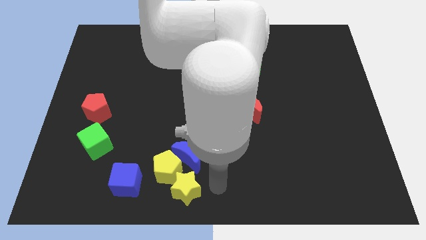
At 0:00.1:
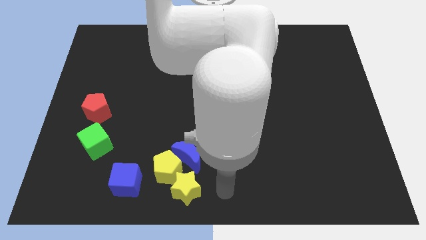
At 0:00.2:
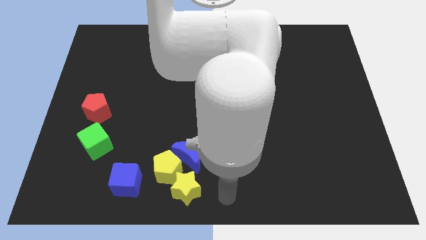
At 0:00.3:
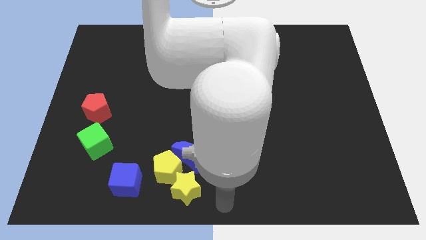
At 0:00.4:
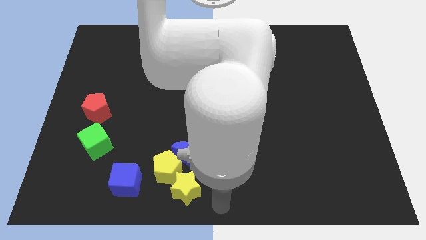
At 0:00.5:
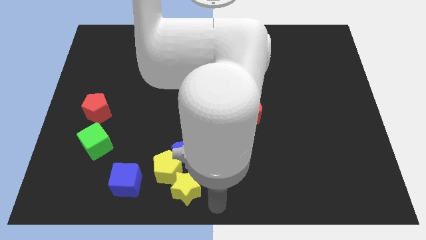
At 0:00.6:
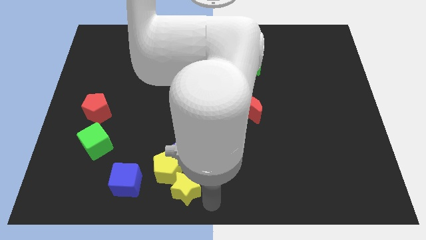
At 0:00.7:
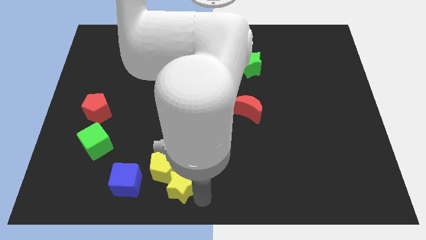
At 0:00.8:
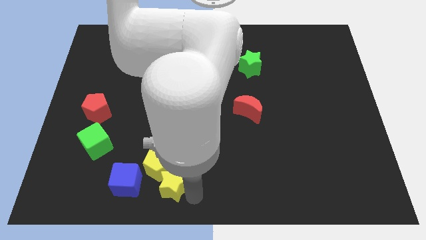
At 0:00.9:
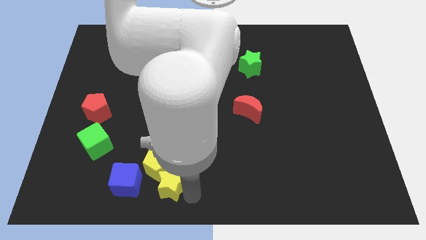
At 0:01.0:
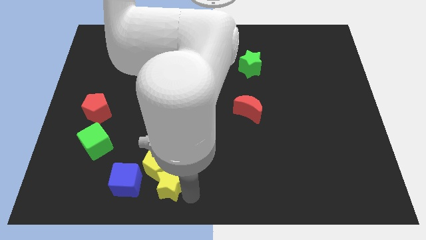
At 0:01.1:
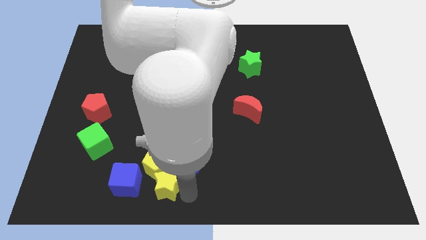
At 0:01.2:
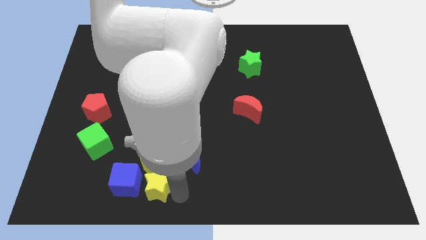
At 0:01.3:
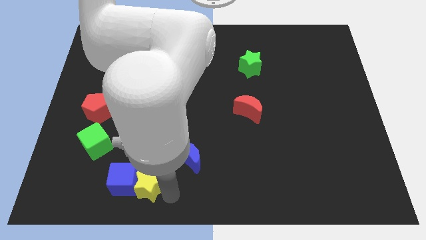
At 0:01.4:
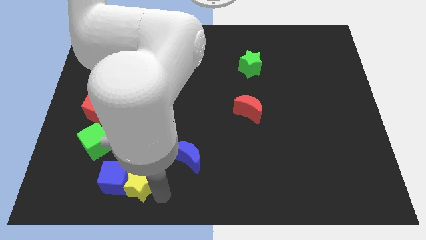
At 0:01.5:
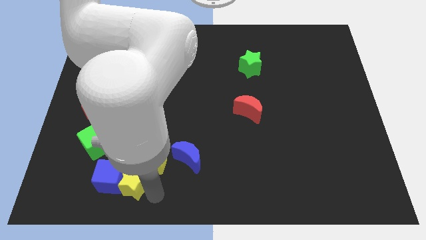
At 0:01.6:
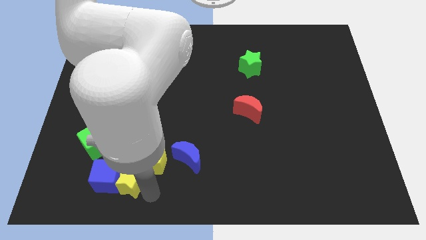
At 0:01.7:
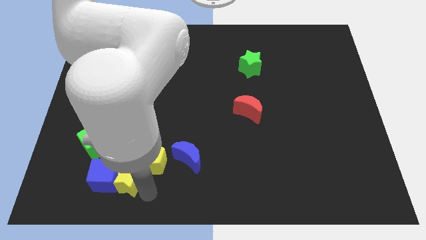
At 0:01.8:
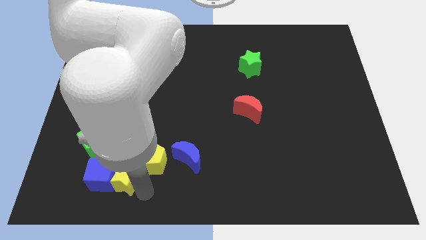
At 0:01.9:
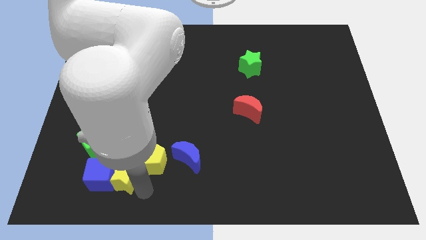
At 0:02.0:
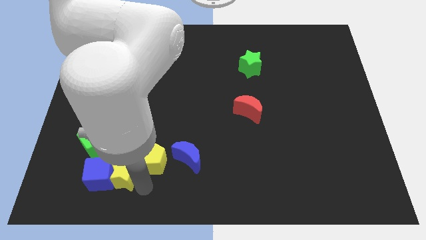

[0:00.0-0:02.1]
move the yellow star into the blue cube

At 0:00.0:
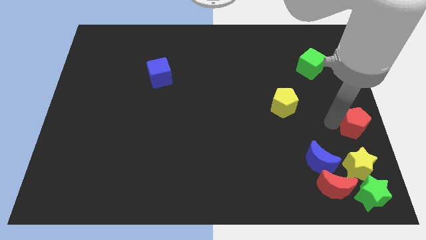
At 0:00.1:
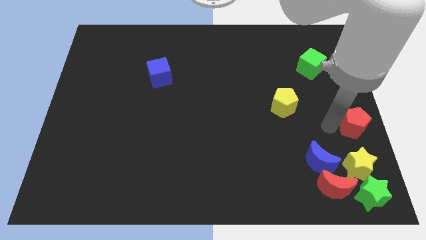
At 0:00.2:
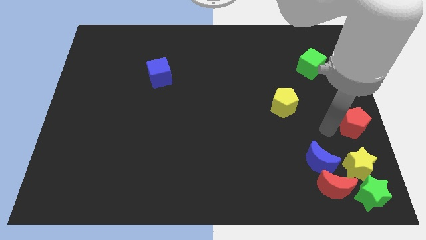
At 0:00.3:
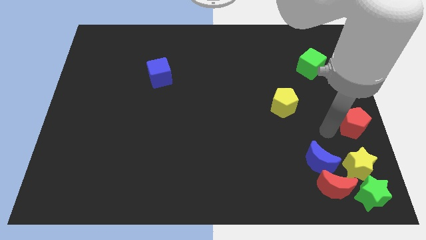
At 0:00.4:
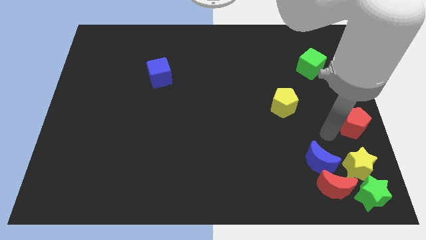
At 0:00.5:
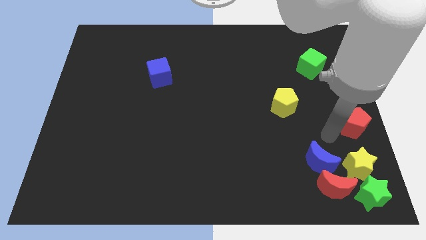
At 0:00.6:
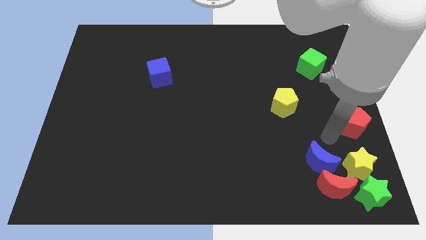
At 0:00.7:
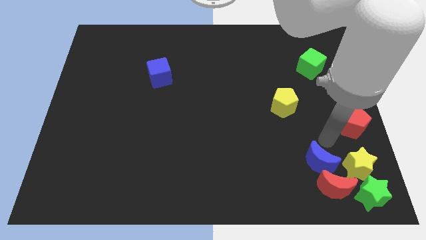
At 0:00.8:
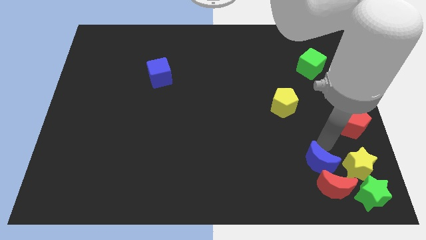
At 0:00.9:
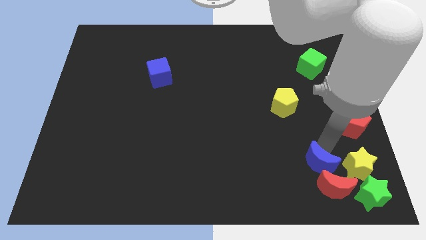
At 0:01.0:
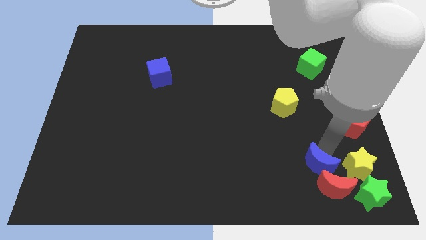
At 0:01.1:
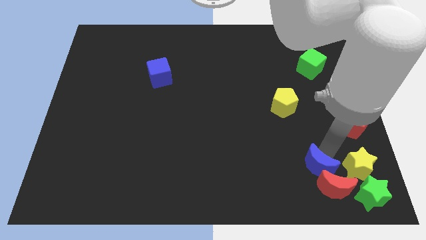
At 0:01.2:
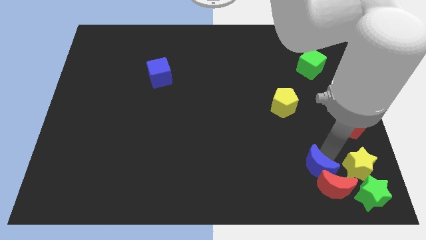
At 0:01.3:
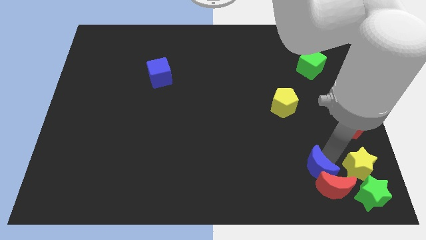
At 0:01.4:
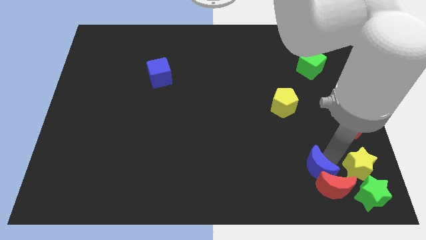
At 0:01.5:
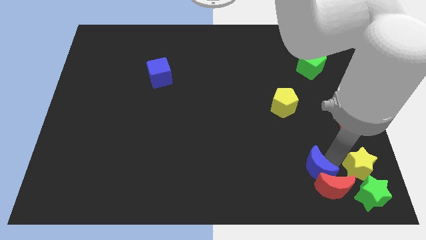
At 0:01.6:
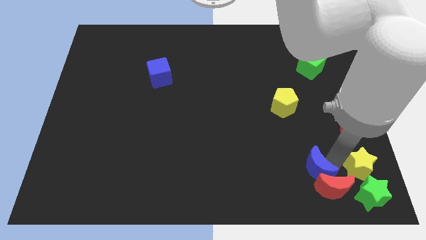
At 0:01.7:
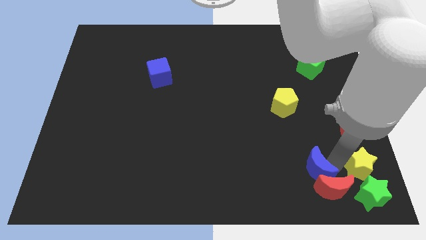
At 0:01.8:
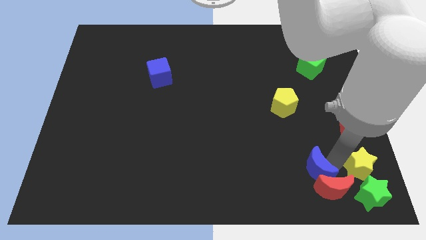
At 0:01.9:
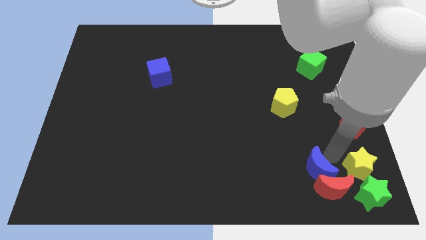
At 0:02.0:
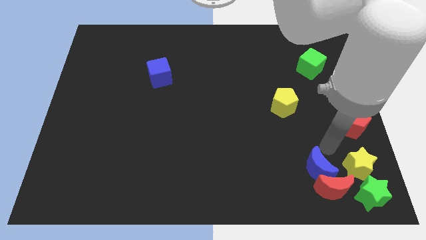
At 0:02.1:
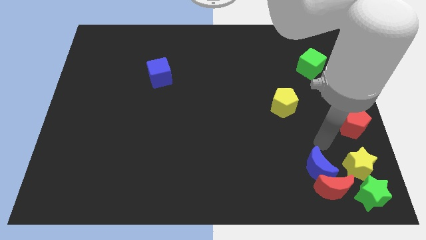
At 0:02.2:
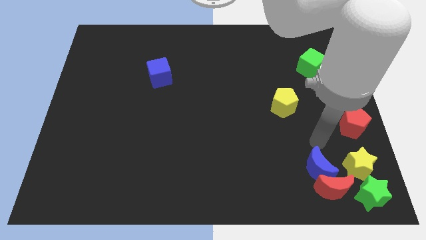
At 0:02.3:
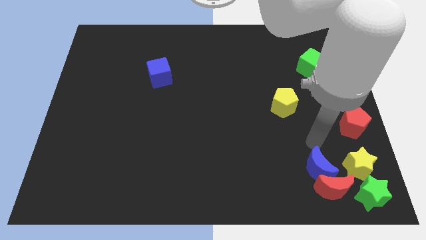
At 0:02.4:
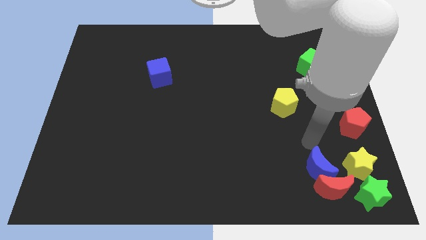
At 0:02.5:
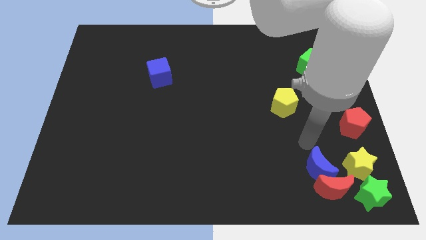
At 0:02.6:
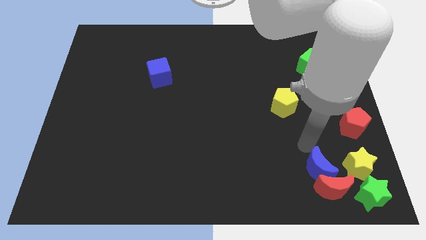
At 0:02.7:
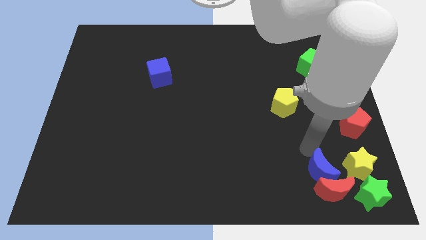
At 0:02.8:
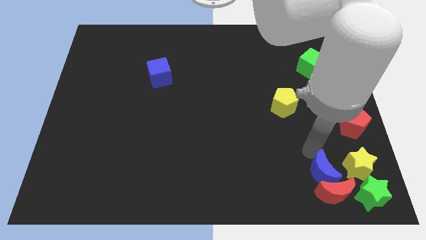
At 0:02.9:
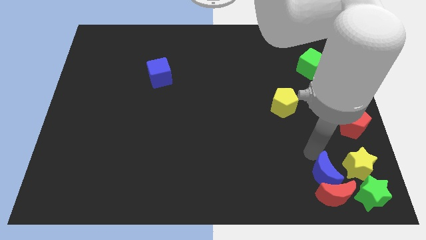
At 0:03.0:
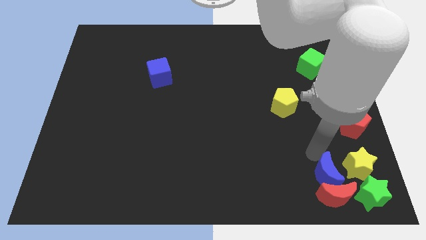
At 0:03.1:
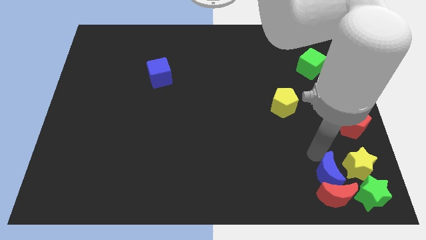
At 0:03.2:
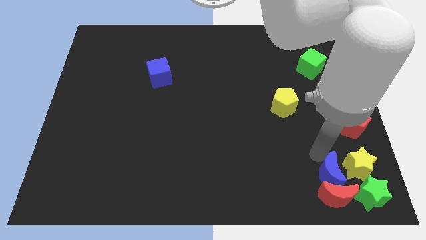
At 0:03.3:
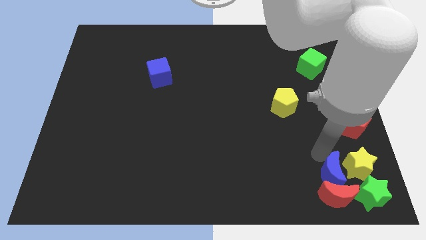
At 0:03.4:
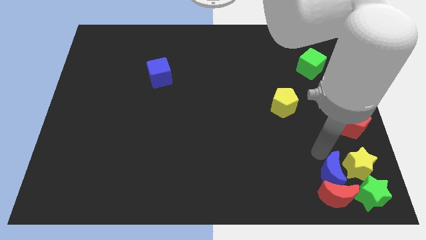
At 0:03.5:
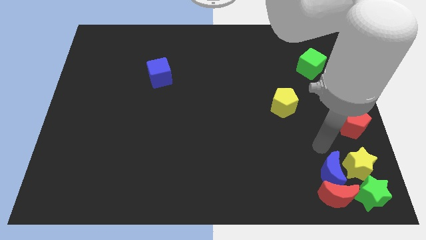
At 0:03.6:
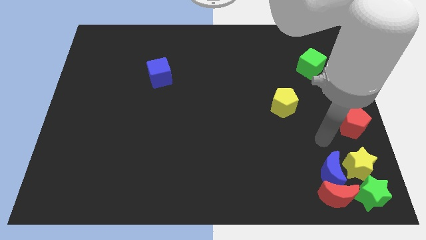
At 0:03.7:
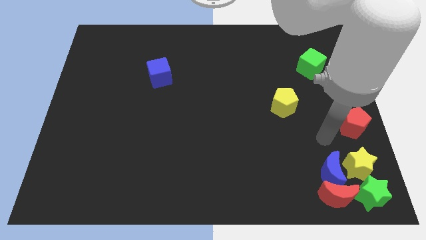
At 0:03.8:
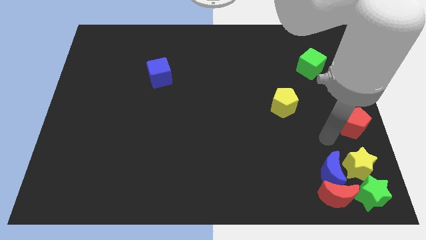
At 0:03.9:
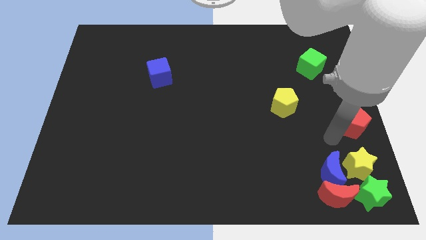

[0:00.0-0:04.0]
push the blue crescent into red crescent

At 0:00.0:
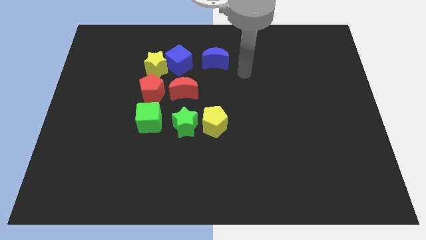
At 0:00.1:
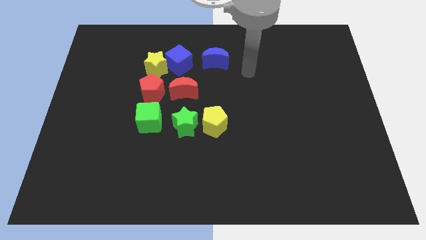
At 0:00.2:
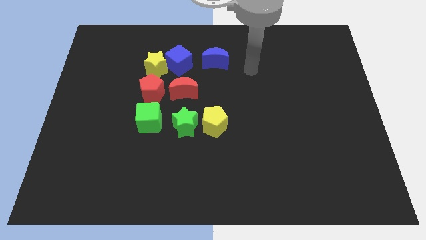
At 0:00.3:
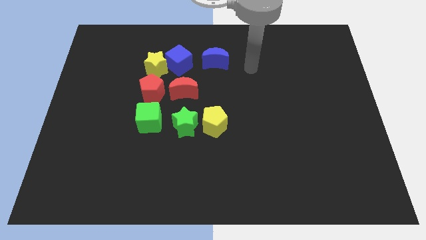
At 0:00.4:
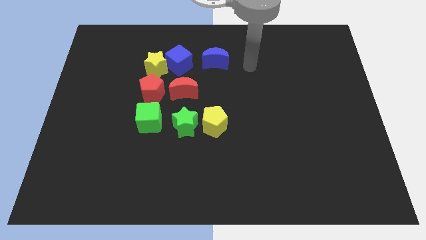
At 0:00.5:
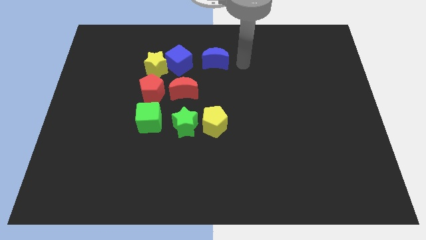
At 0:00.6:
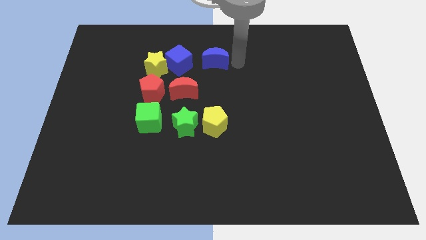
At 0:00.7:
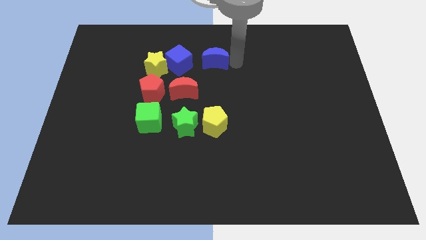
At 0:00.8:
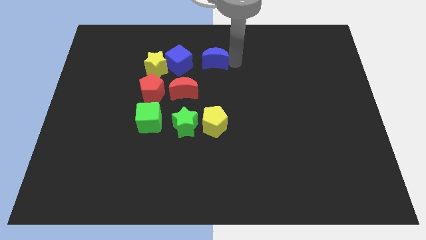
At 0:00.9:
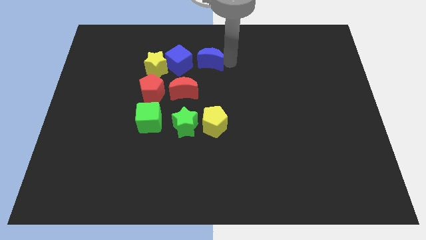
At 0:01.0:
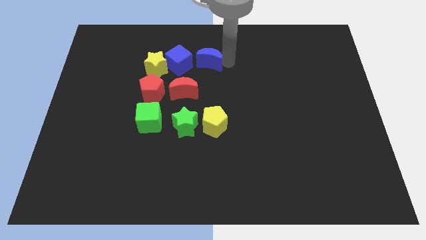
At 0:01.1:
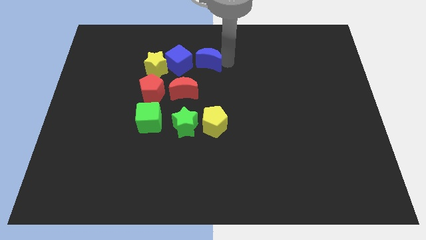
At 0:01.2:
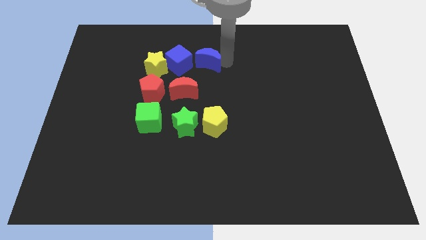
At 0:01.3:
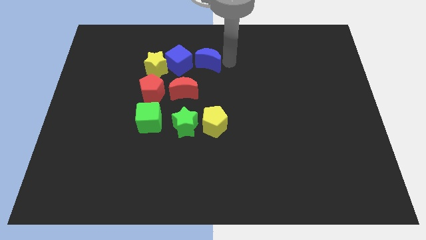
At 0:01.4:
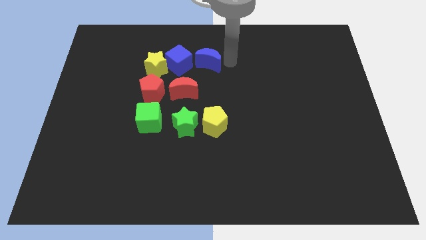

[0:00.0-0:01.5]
slide the blue moon towards left

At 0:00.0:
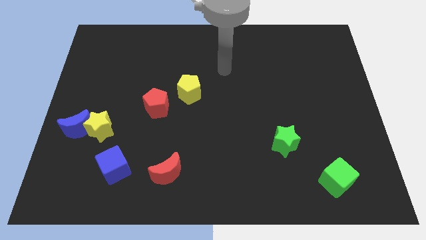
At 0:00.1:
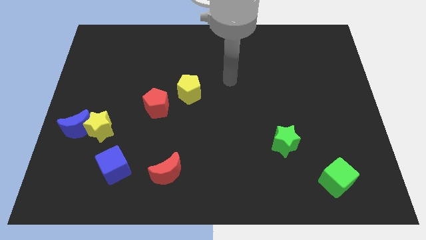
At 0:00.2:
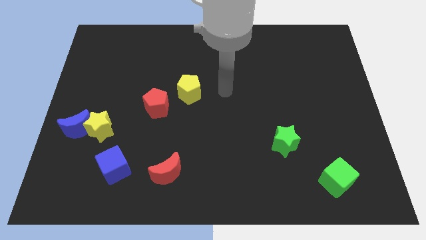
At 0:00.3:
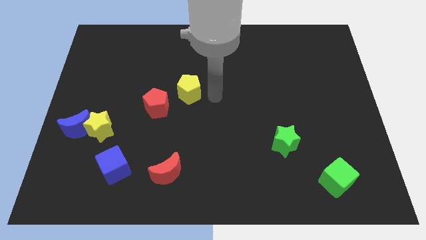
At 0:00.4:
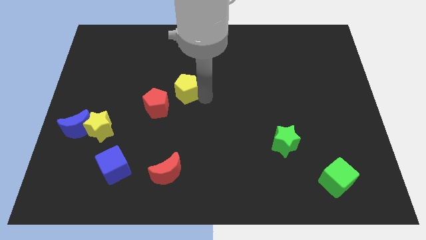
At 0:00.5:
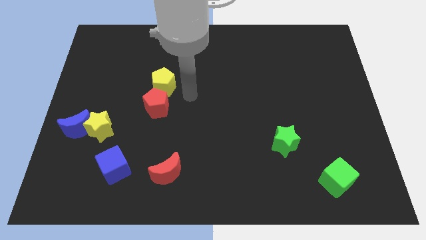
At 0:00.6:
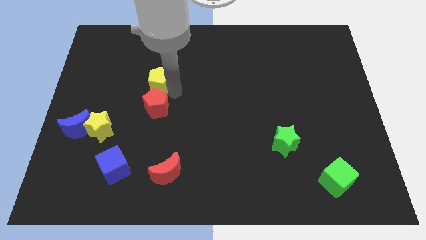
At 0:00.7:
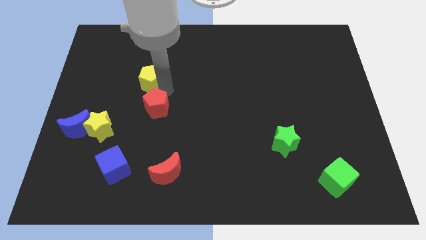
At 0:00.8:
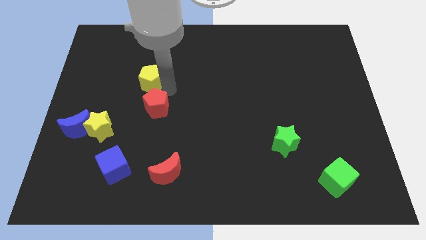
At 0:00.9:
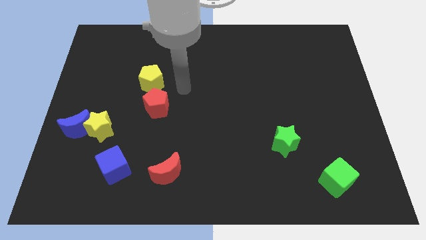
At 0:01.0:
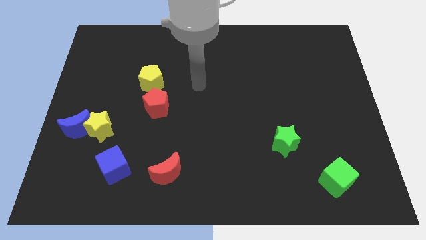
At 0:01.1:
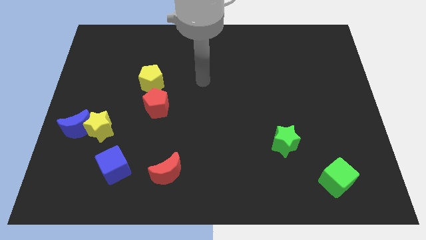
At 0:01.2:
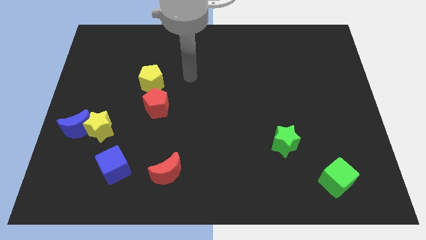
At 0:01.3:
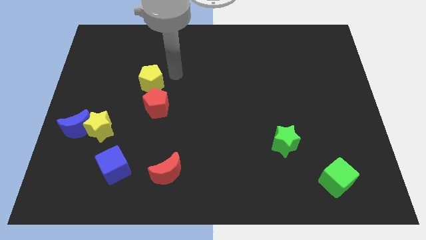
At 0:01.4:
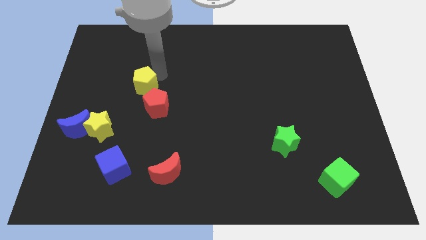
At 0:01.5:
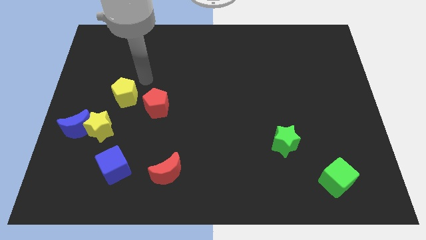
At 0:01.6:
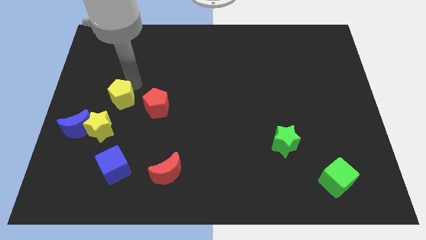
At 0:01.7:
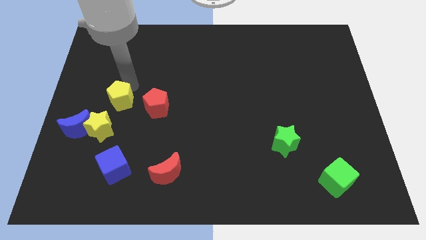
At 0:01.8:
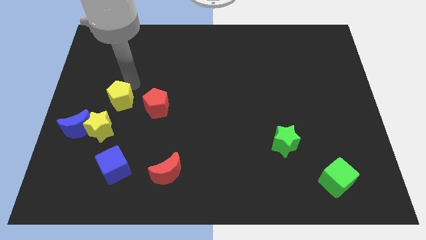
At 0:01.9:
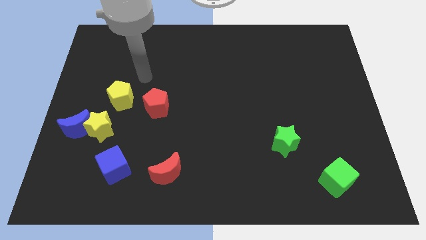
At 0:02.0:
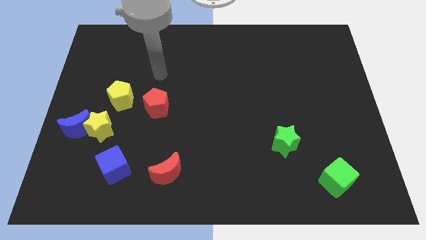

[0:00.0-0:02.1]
push the yellow pentagon to the top right of the yellow star
